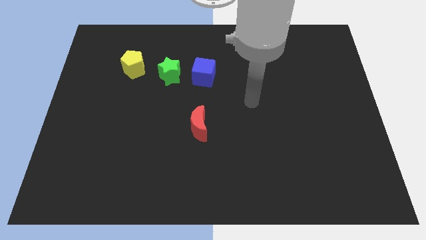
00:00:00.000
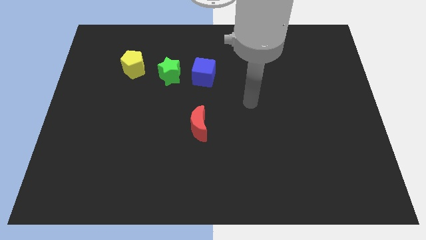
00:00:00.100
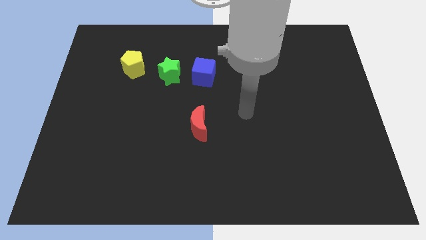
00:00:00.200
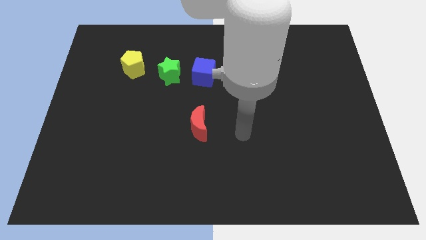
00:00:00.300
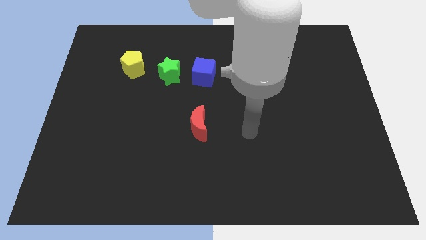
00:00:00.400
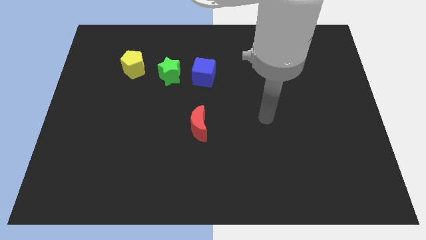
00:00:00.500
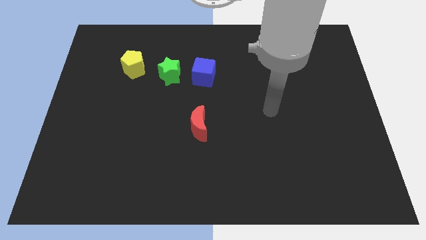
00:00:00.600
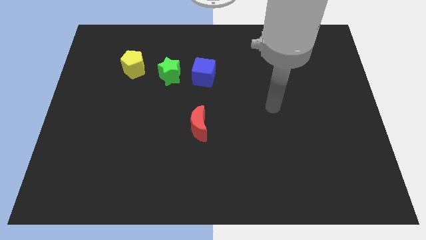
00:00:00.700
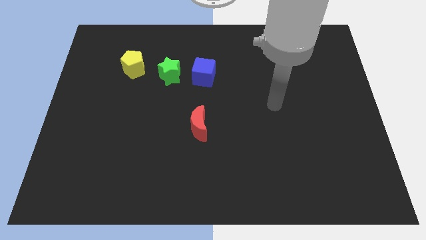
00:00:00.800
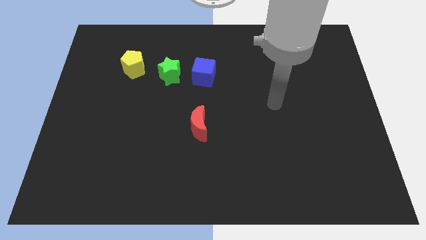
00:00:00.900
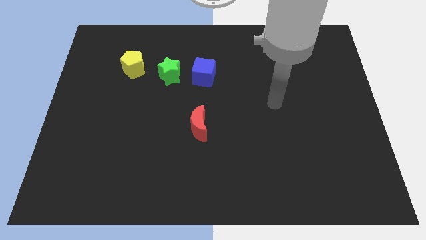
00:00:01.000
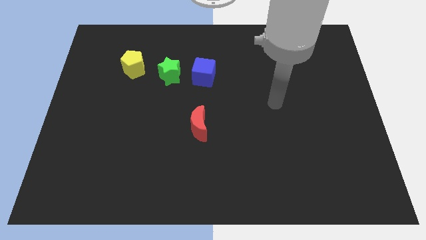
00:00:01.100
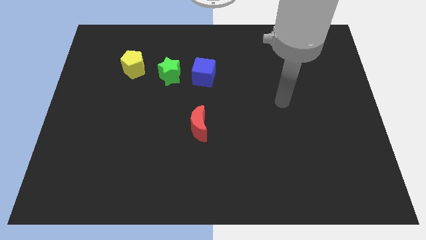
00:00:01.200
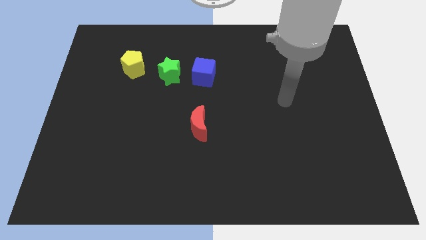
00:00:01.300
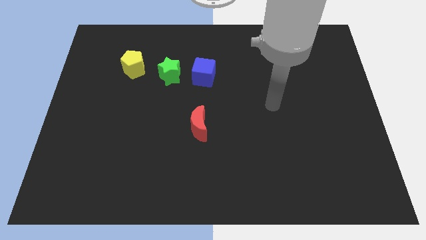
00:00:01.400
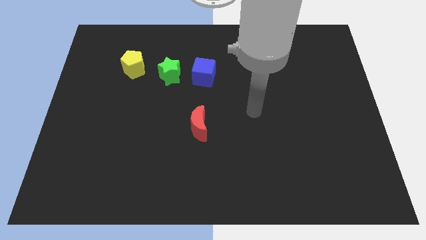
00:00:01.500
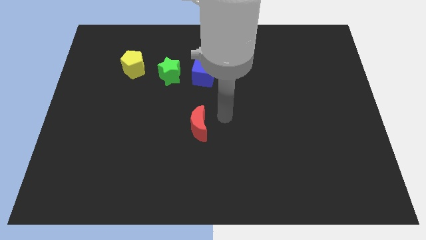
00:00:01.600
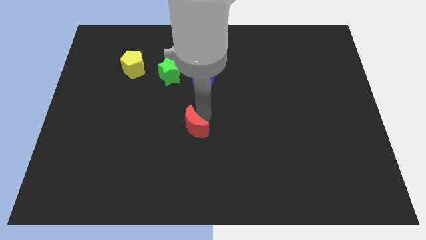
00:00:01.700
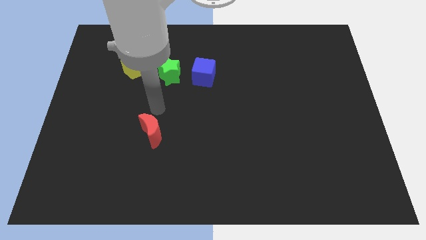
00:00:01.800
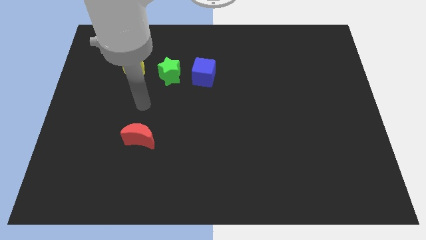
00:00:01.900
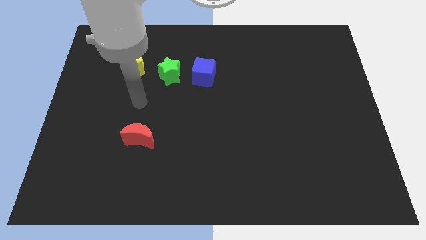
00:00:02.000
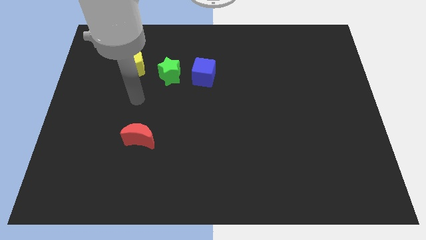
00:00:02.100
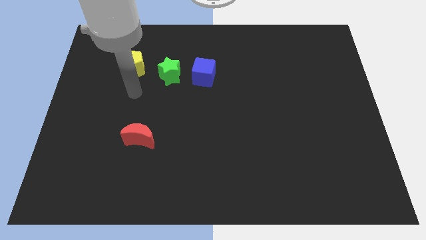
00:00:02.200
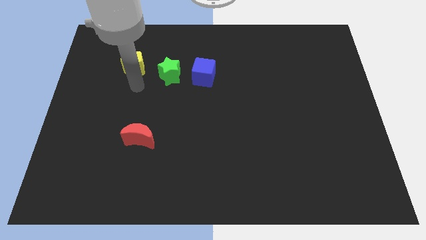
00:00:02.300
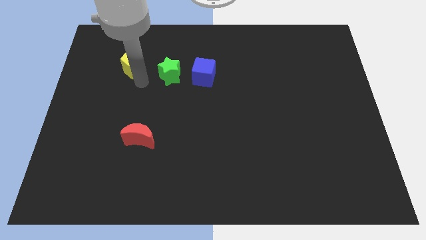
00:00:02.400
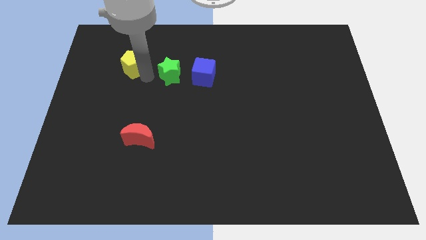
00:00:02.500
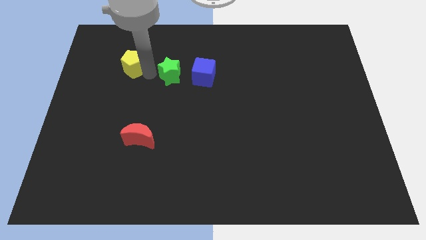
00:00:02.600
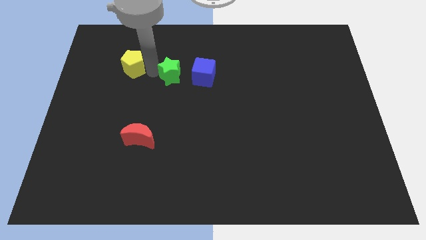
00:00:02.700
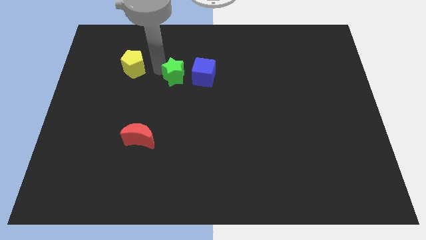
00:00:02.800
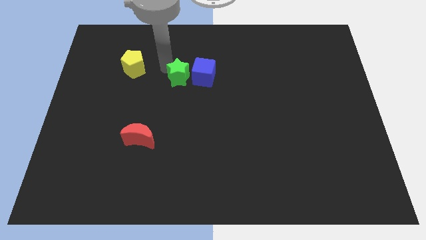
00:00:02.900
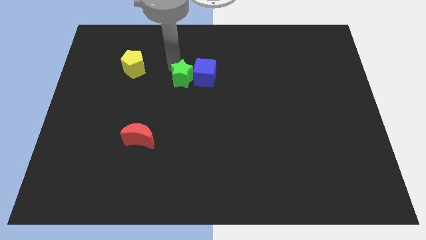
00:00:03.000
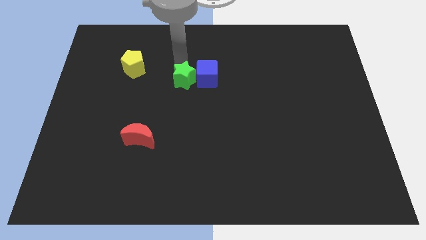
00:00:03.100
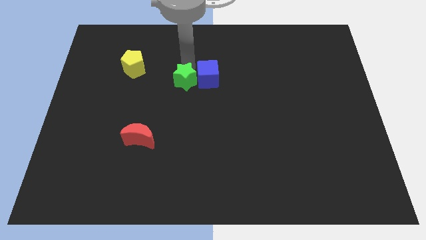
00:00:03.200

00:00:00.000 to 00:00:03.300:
put the green block towards the blue block

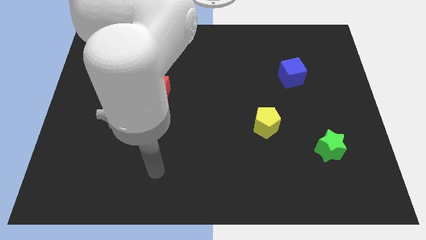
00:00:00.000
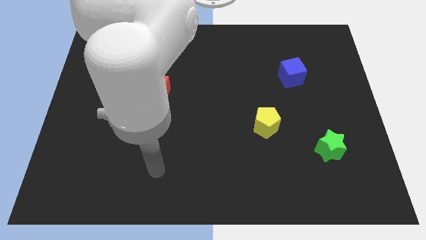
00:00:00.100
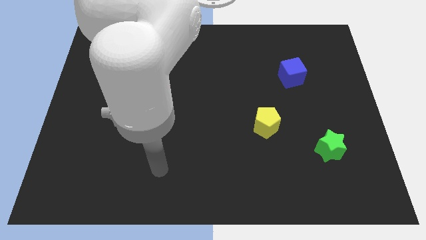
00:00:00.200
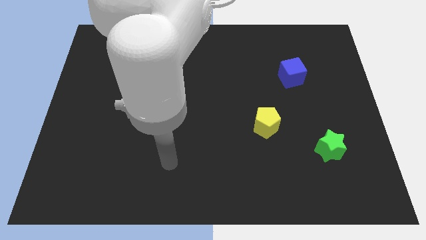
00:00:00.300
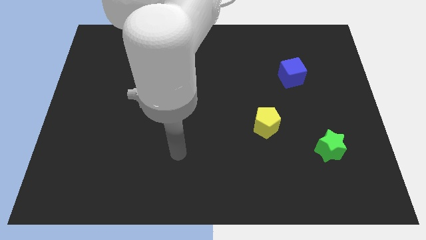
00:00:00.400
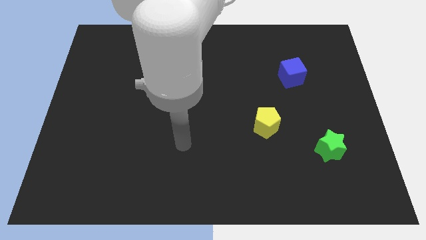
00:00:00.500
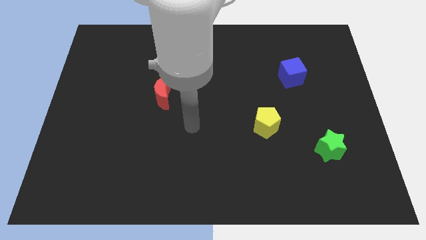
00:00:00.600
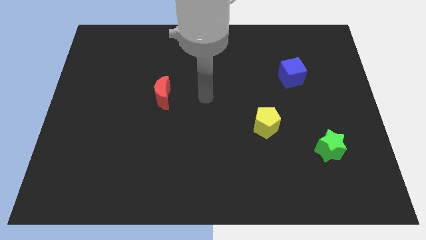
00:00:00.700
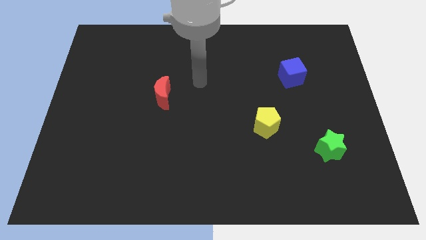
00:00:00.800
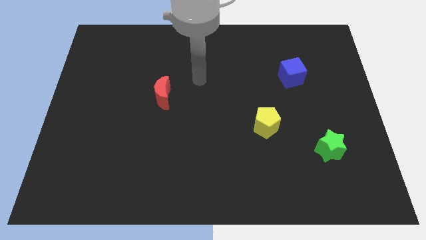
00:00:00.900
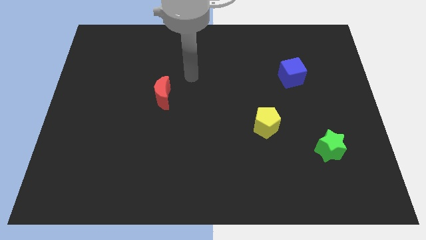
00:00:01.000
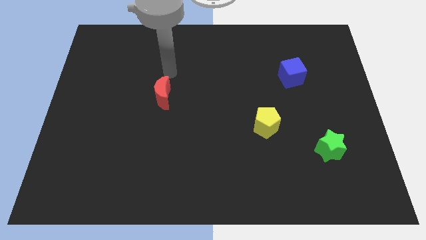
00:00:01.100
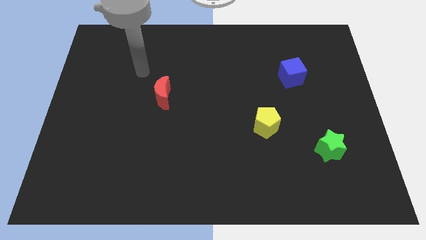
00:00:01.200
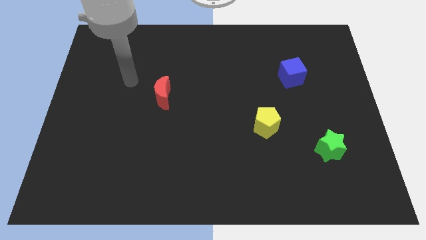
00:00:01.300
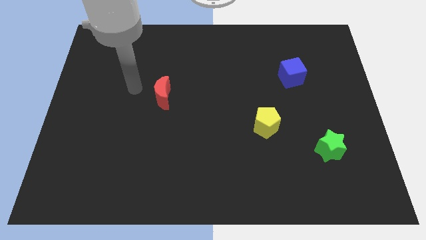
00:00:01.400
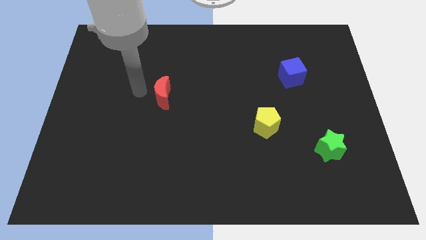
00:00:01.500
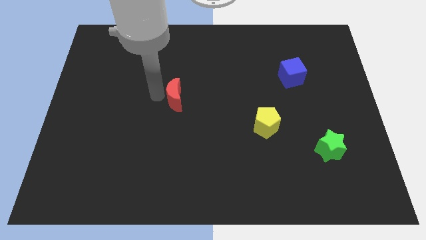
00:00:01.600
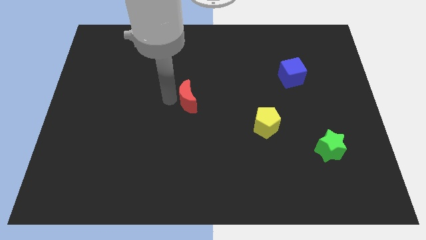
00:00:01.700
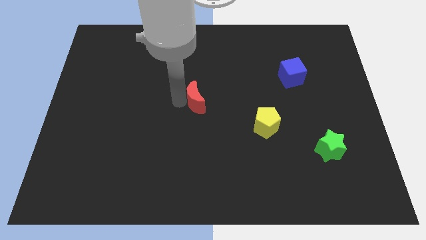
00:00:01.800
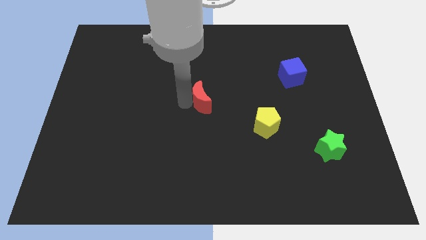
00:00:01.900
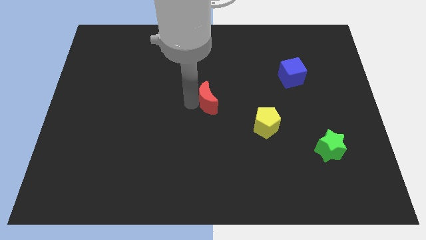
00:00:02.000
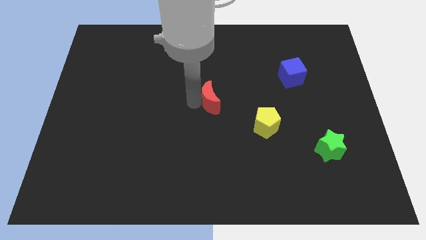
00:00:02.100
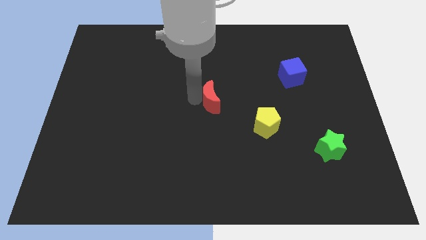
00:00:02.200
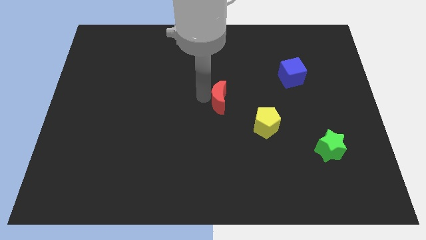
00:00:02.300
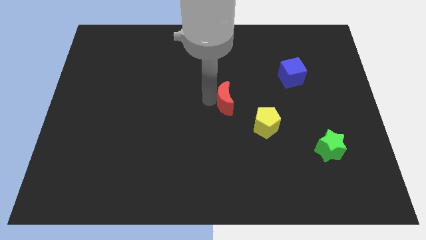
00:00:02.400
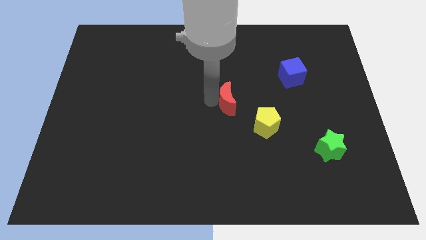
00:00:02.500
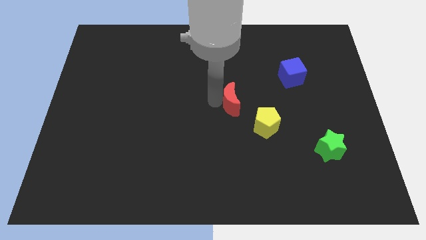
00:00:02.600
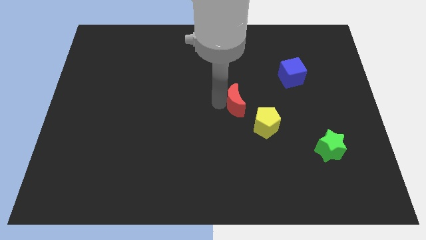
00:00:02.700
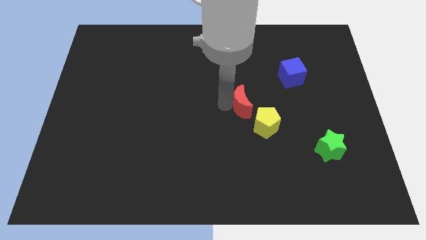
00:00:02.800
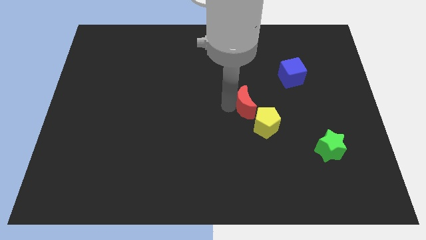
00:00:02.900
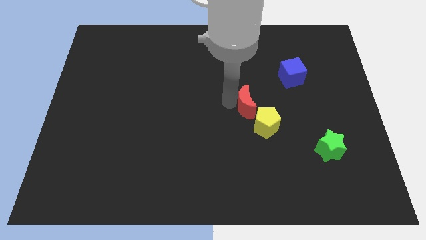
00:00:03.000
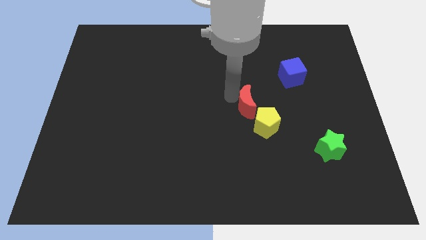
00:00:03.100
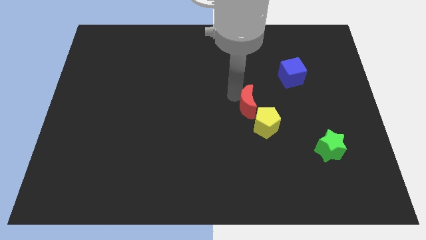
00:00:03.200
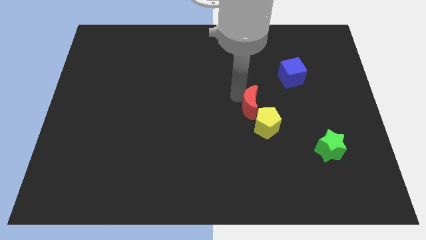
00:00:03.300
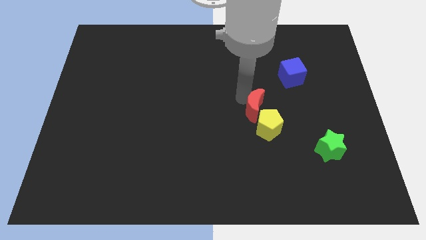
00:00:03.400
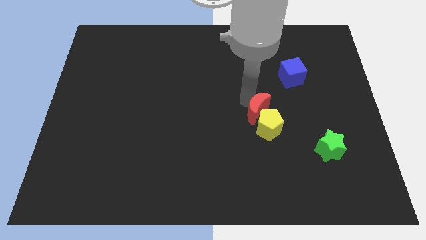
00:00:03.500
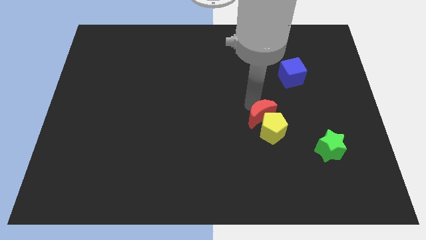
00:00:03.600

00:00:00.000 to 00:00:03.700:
move the red moon to the yellow block

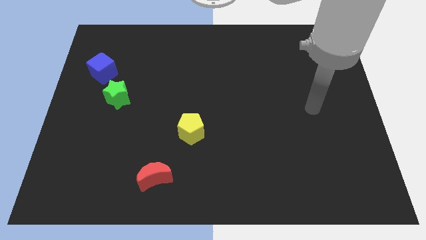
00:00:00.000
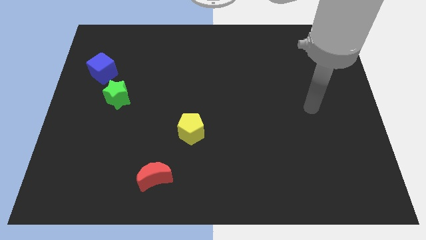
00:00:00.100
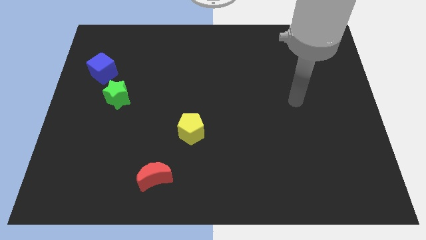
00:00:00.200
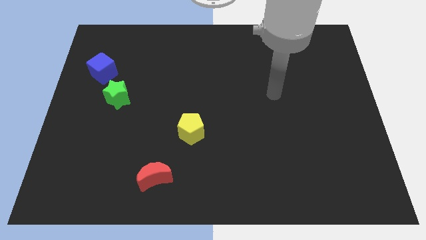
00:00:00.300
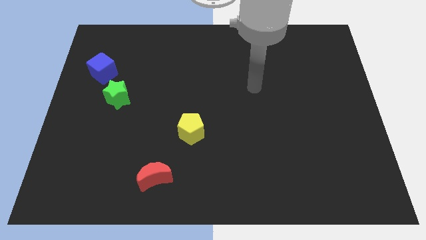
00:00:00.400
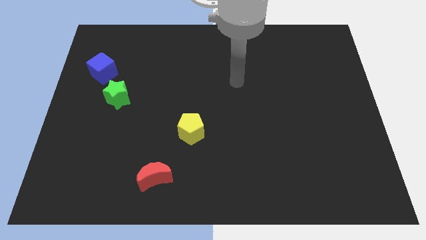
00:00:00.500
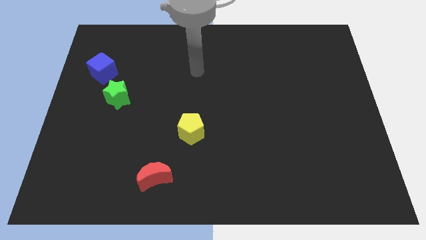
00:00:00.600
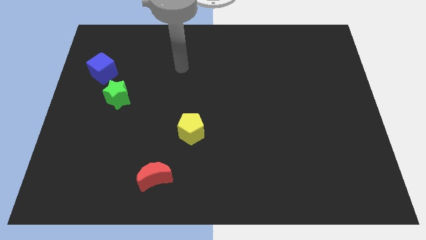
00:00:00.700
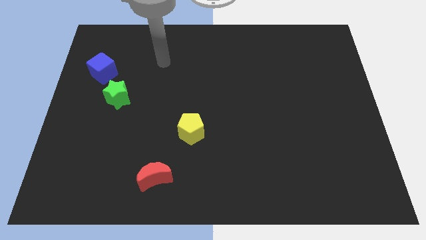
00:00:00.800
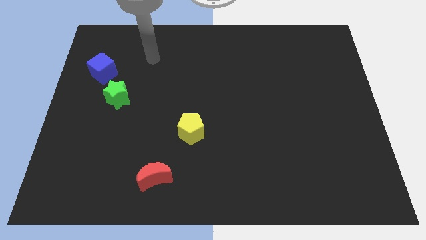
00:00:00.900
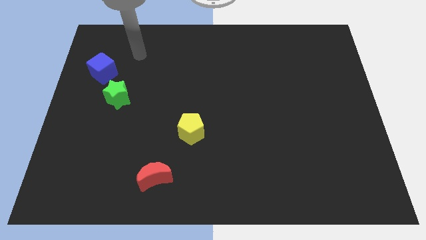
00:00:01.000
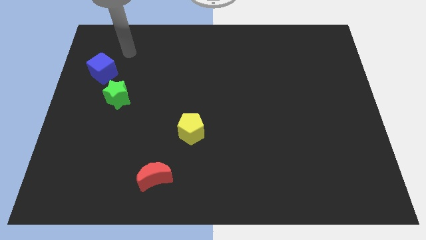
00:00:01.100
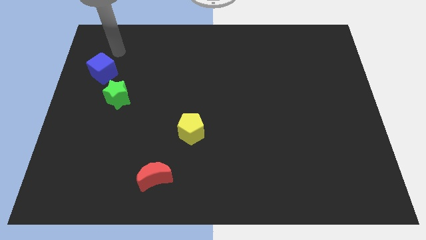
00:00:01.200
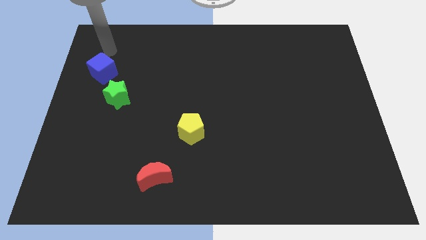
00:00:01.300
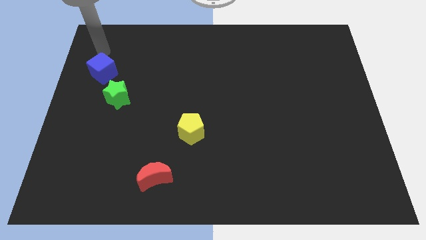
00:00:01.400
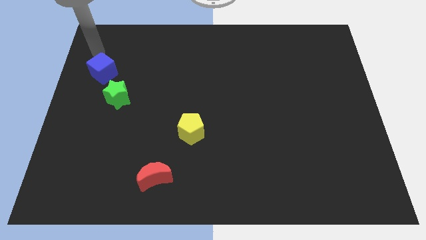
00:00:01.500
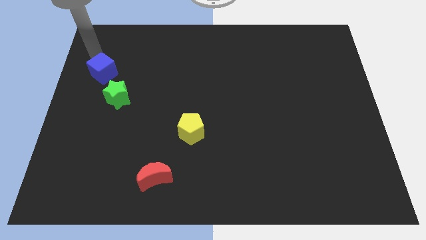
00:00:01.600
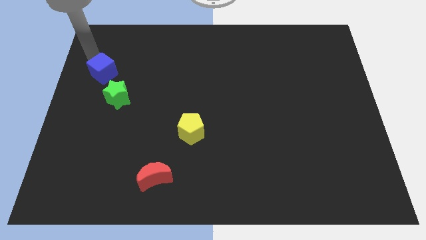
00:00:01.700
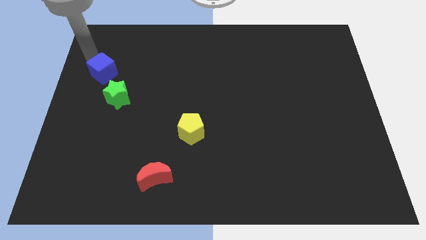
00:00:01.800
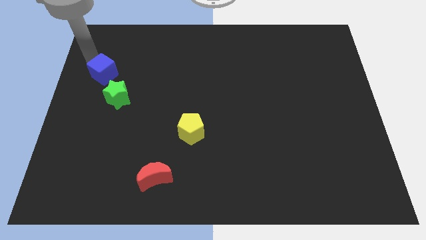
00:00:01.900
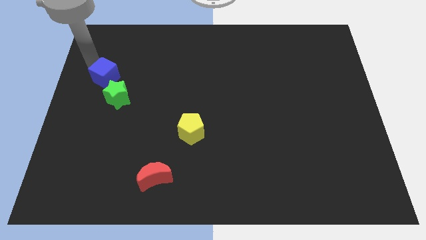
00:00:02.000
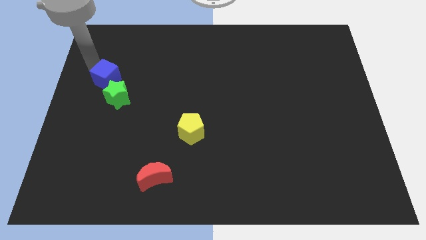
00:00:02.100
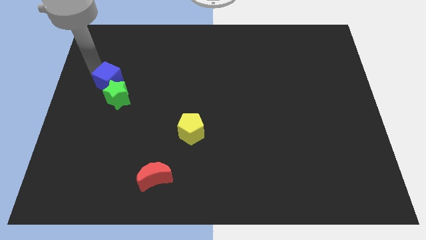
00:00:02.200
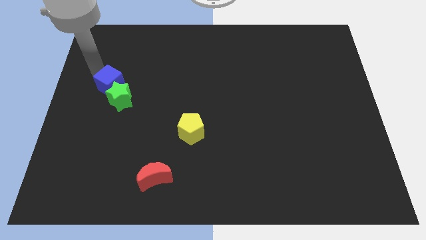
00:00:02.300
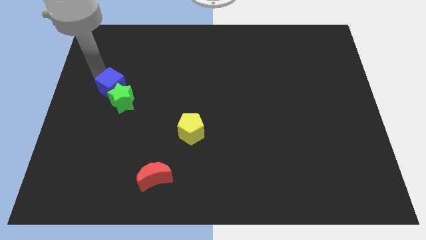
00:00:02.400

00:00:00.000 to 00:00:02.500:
push the blue cube next to the green star
